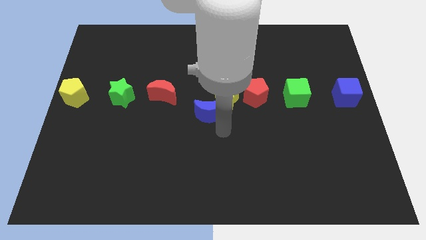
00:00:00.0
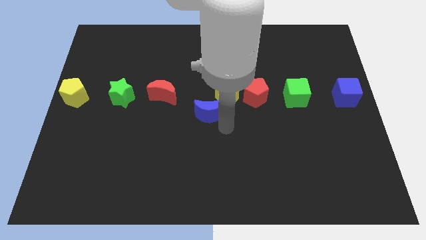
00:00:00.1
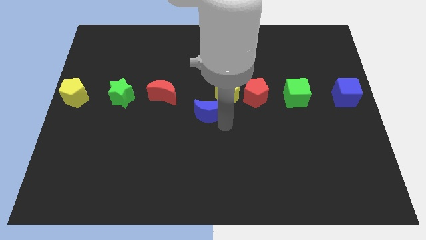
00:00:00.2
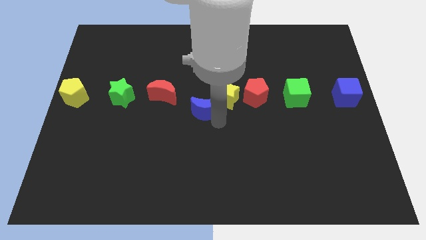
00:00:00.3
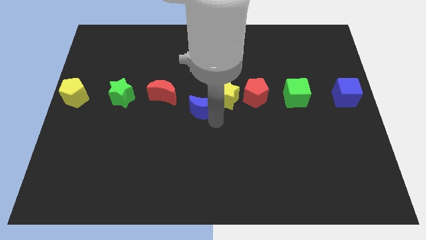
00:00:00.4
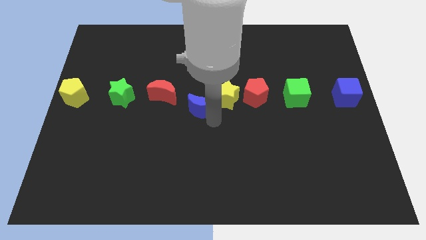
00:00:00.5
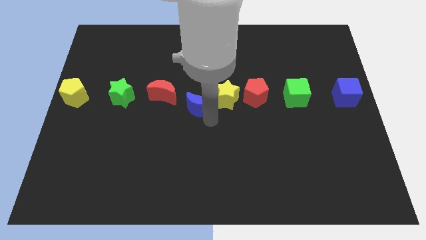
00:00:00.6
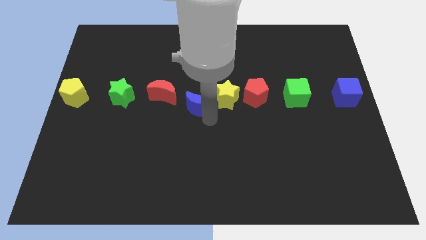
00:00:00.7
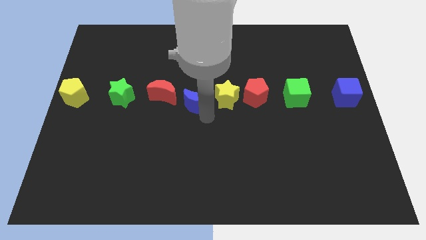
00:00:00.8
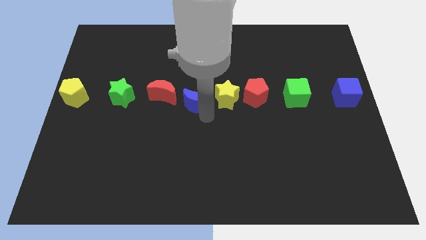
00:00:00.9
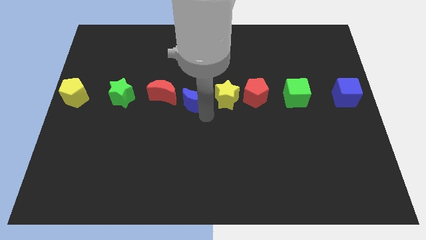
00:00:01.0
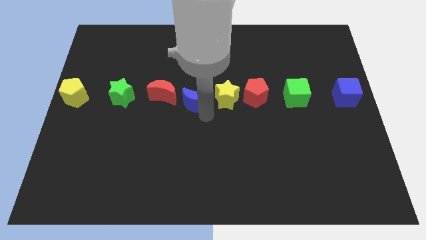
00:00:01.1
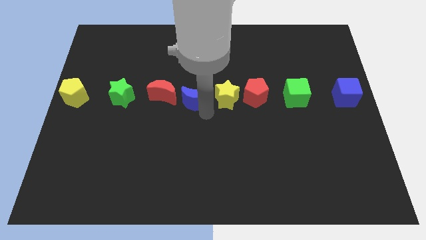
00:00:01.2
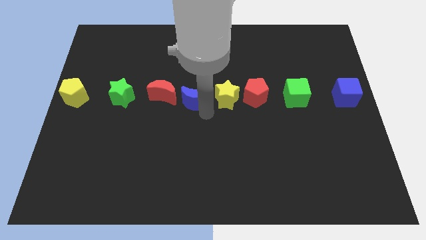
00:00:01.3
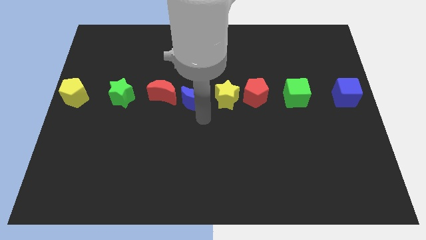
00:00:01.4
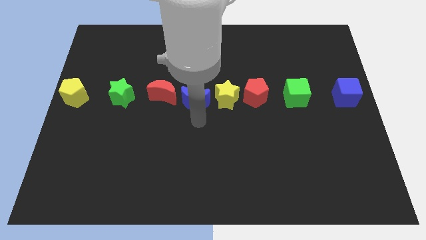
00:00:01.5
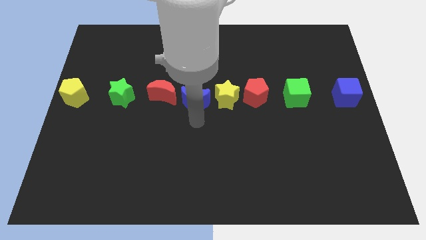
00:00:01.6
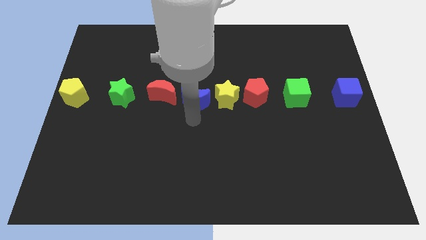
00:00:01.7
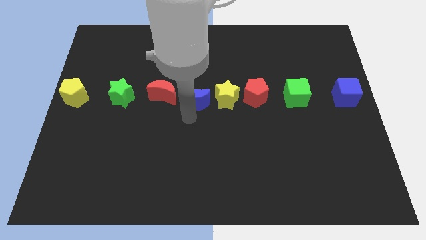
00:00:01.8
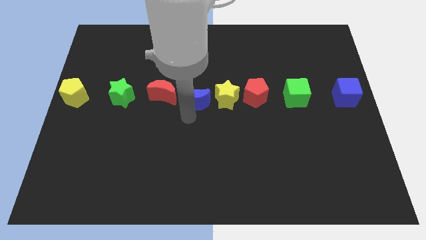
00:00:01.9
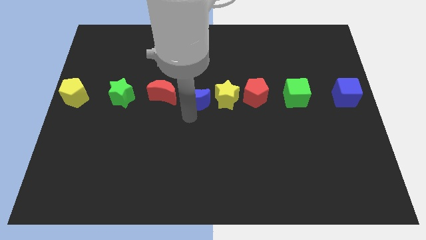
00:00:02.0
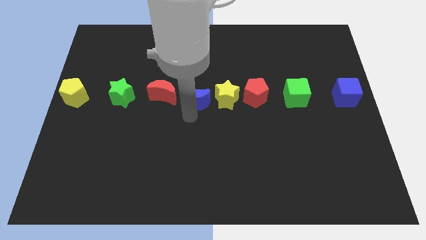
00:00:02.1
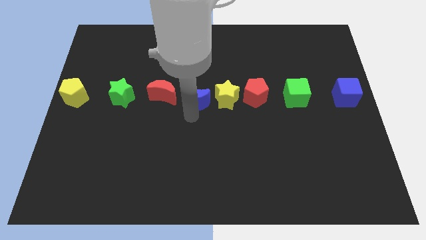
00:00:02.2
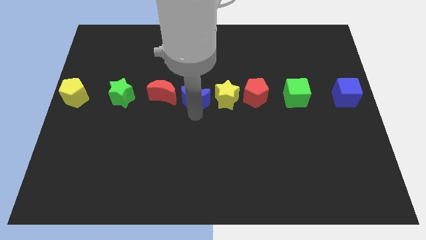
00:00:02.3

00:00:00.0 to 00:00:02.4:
place the blue crescent in between the red crescent and yellow star

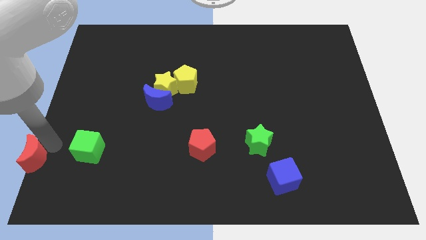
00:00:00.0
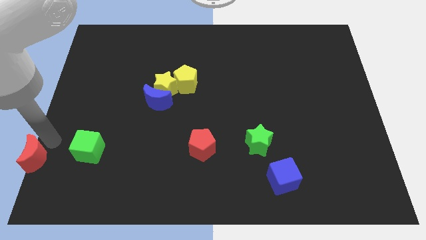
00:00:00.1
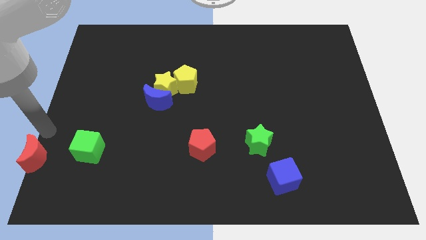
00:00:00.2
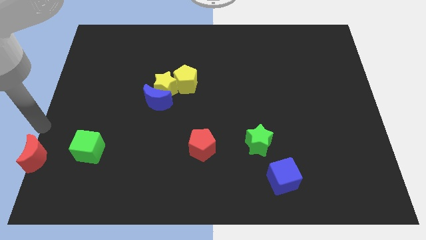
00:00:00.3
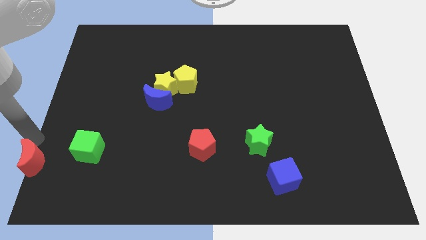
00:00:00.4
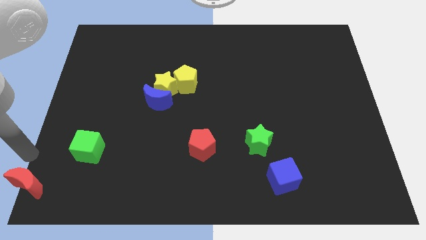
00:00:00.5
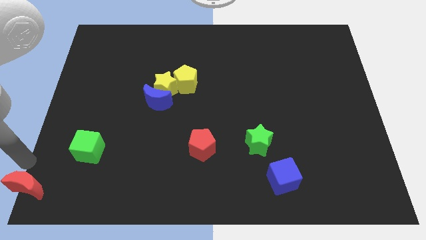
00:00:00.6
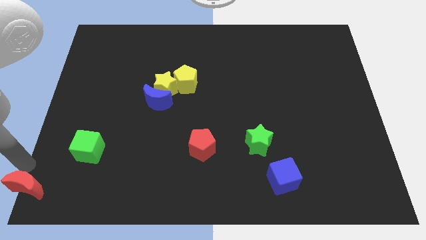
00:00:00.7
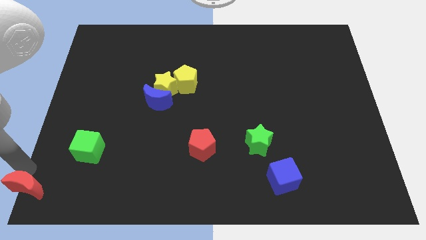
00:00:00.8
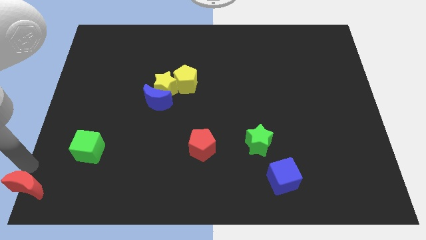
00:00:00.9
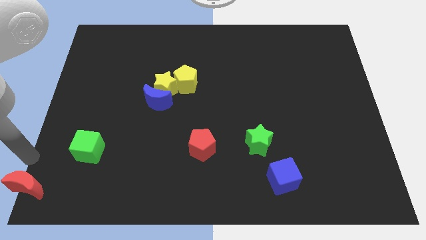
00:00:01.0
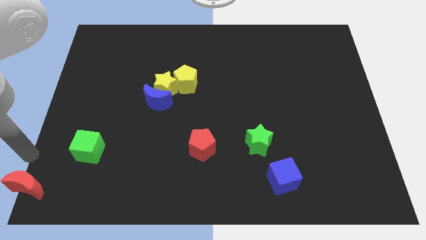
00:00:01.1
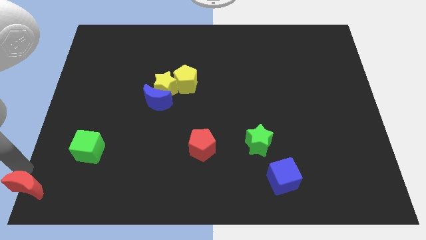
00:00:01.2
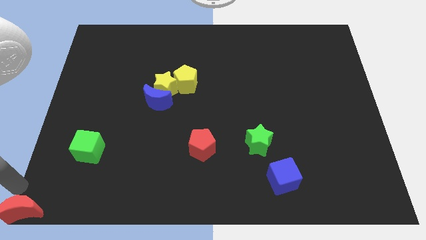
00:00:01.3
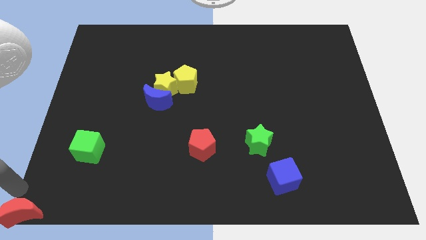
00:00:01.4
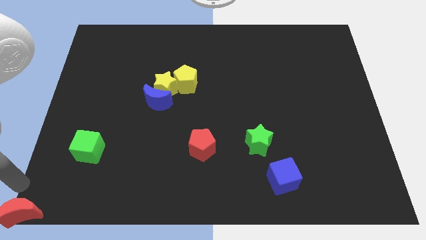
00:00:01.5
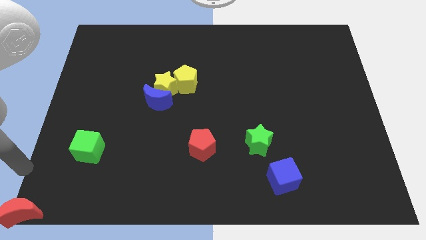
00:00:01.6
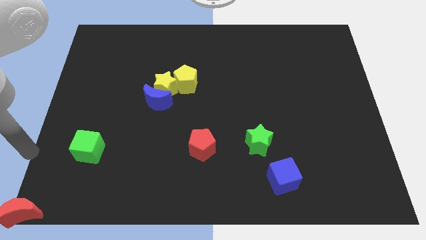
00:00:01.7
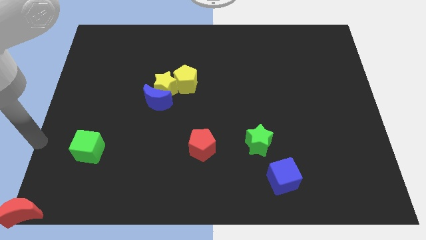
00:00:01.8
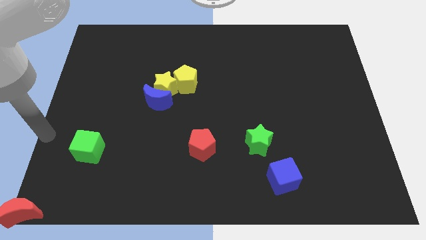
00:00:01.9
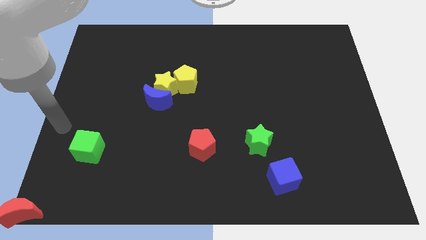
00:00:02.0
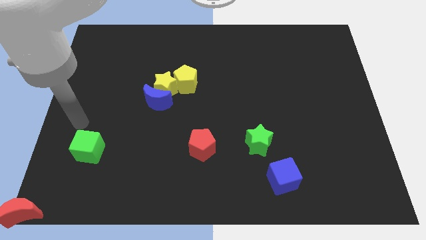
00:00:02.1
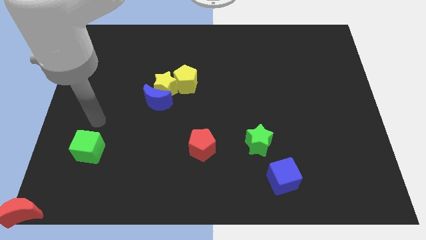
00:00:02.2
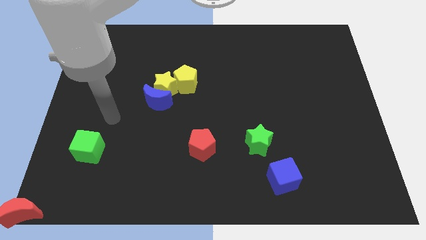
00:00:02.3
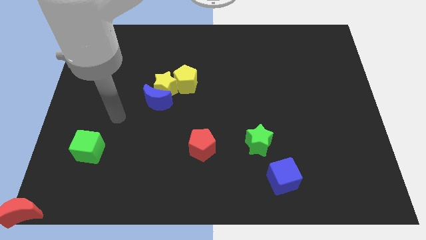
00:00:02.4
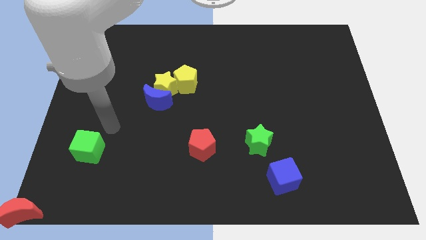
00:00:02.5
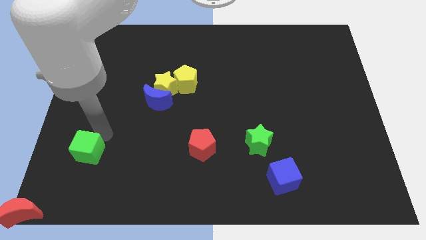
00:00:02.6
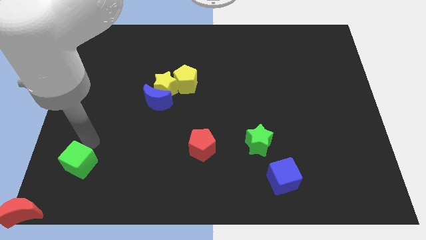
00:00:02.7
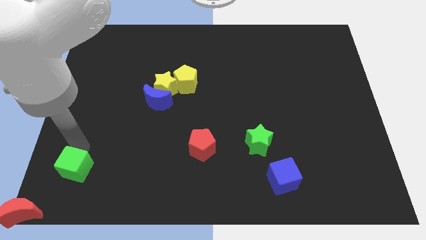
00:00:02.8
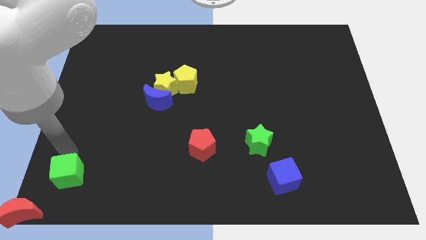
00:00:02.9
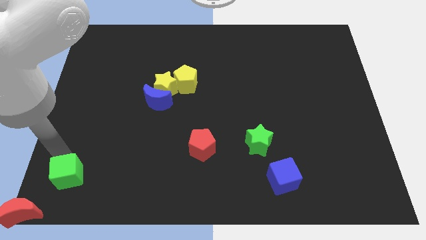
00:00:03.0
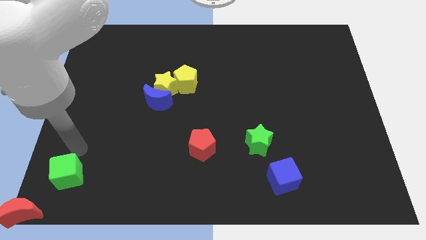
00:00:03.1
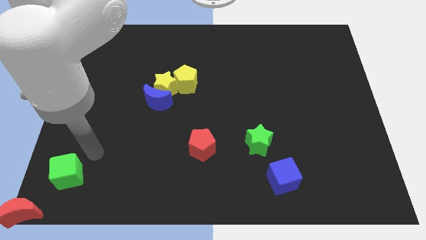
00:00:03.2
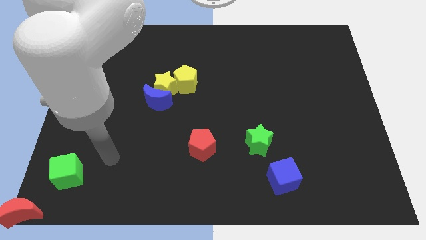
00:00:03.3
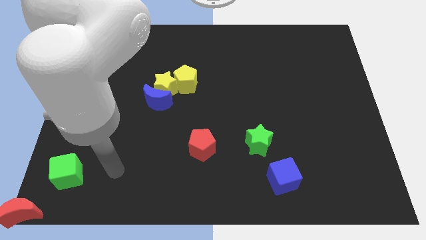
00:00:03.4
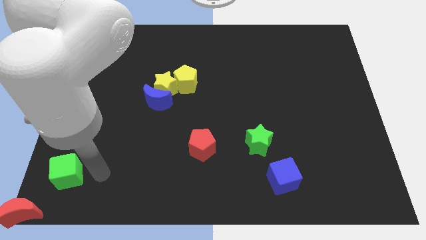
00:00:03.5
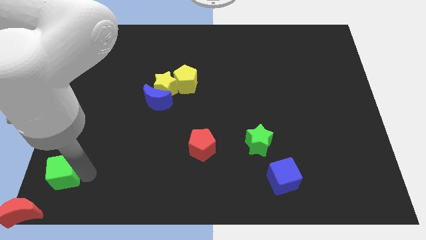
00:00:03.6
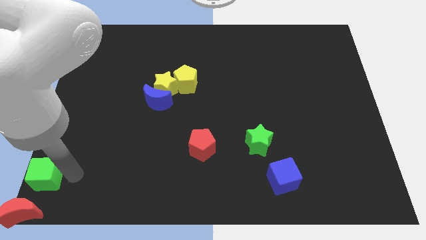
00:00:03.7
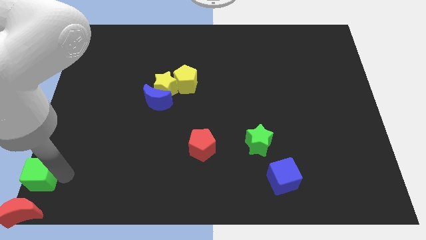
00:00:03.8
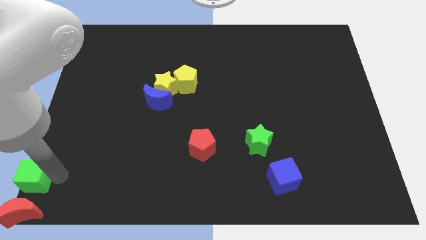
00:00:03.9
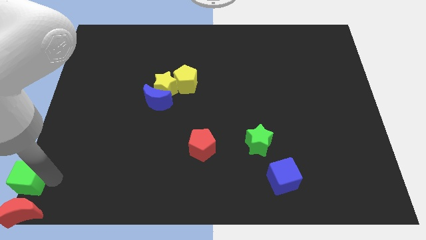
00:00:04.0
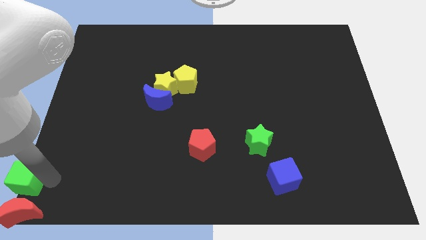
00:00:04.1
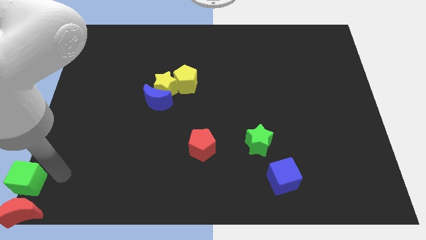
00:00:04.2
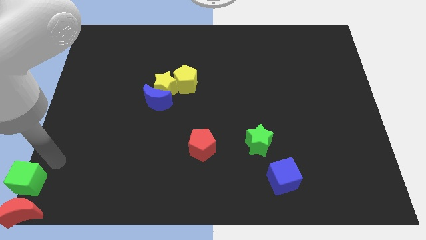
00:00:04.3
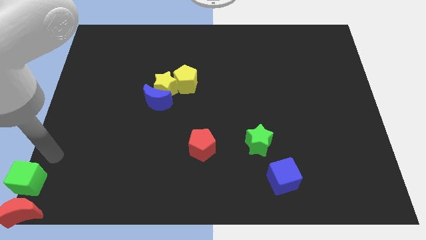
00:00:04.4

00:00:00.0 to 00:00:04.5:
place the green cube and red crescent towards bottom left

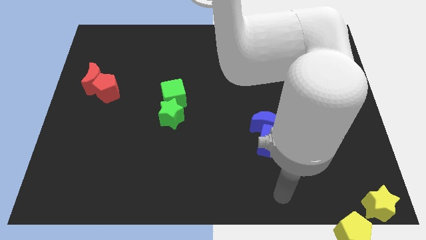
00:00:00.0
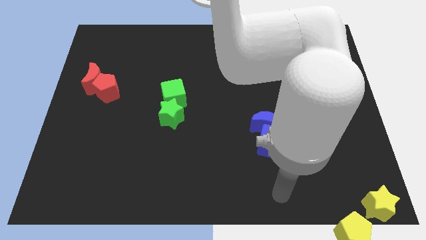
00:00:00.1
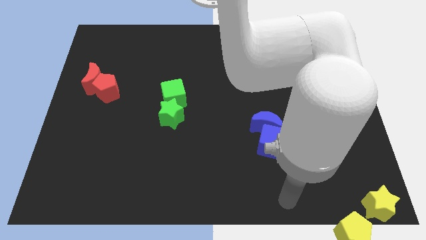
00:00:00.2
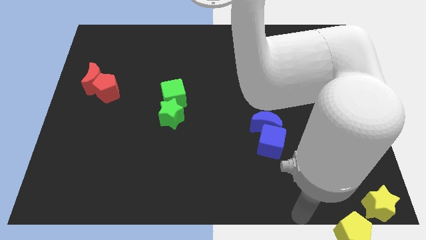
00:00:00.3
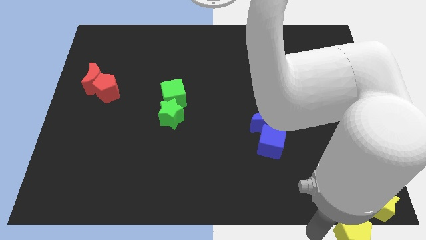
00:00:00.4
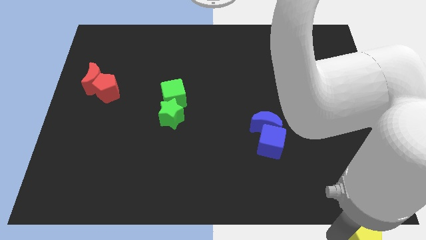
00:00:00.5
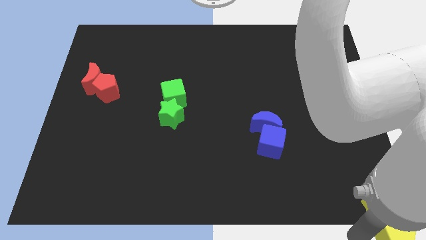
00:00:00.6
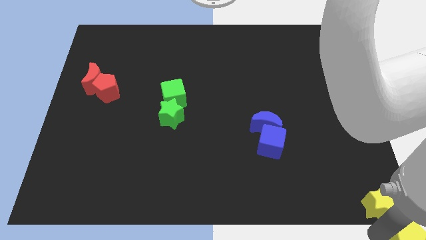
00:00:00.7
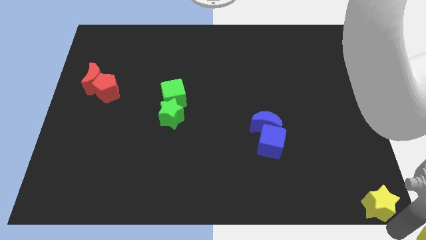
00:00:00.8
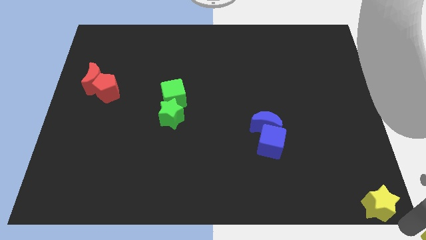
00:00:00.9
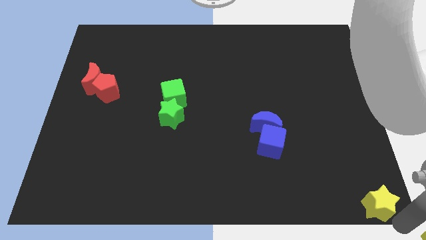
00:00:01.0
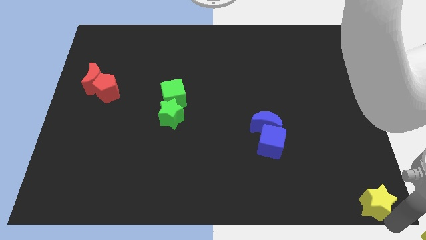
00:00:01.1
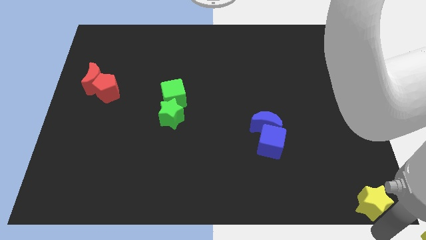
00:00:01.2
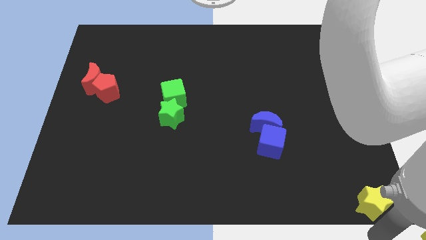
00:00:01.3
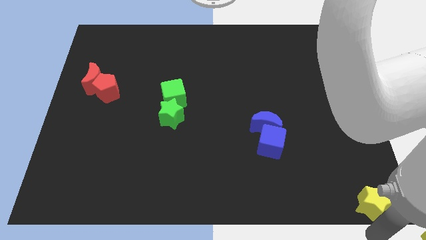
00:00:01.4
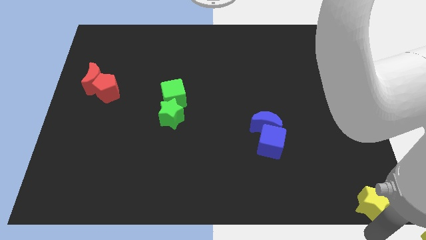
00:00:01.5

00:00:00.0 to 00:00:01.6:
place the yellow star at the bottom right corner of the board

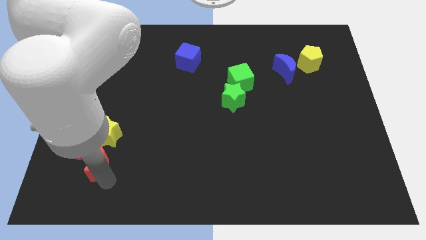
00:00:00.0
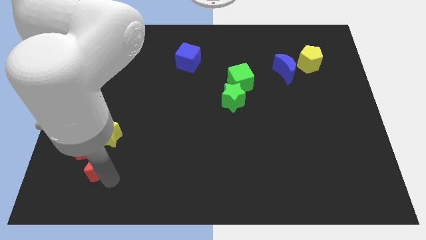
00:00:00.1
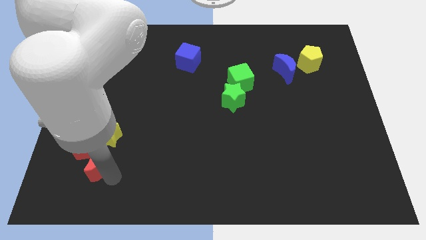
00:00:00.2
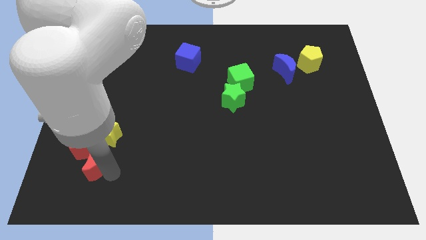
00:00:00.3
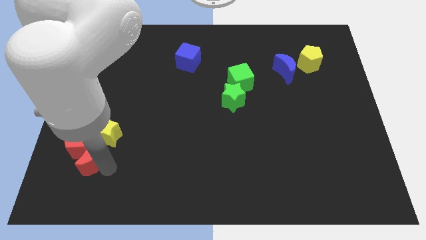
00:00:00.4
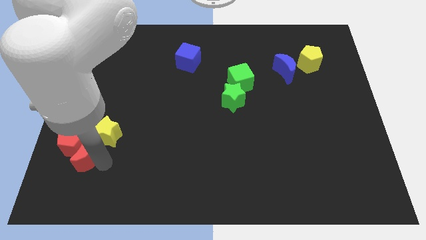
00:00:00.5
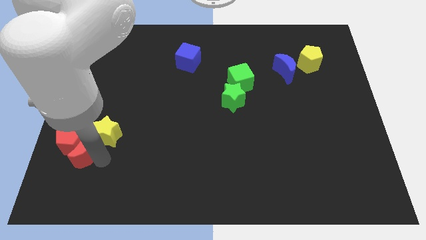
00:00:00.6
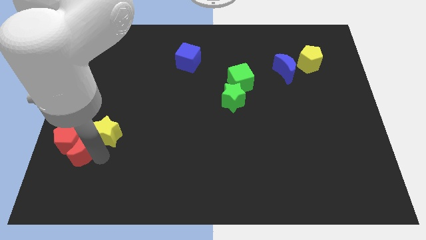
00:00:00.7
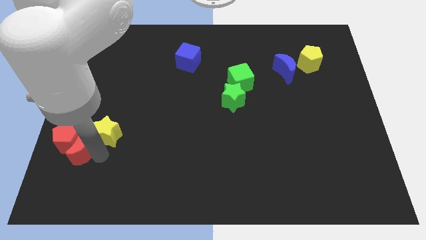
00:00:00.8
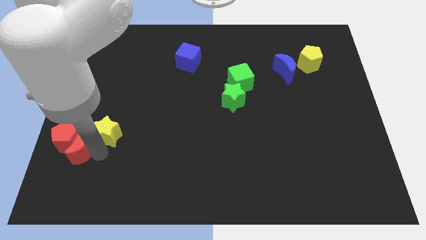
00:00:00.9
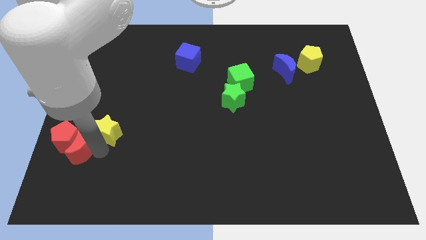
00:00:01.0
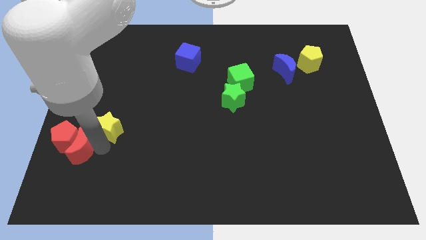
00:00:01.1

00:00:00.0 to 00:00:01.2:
push the red crescent into the red pentagon
